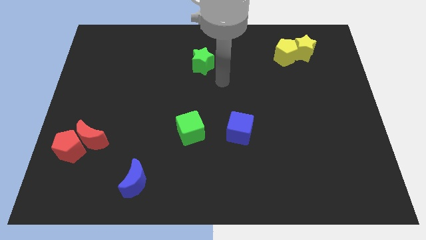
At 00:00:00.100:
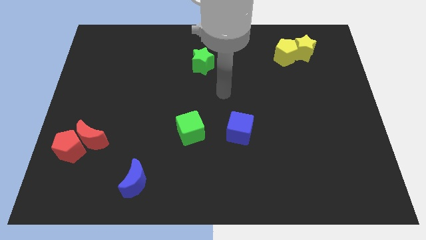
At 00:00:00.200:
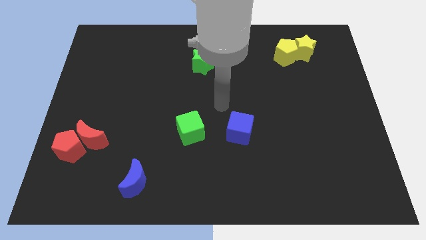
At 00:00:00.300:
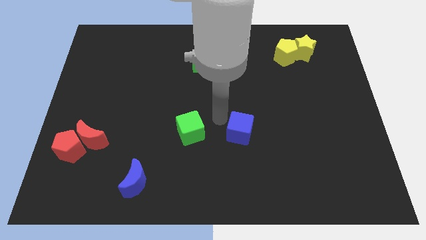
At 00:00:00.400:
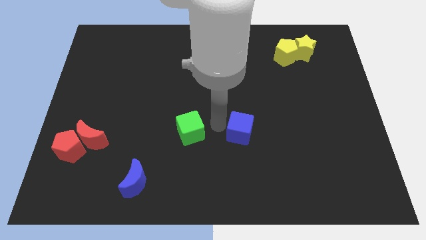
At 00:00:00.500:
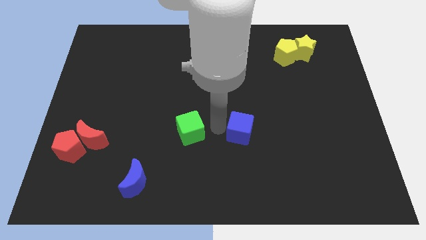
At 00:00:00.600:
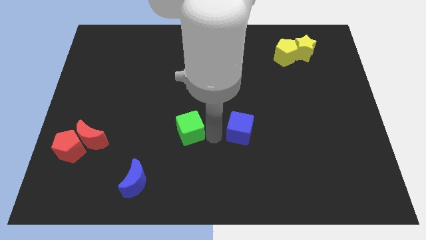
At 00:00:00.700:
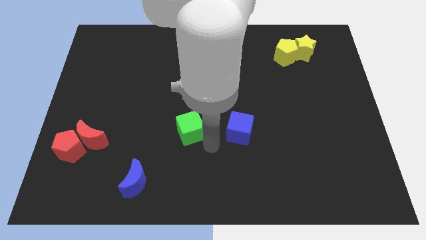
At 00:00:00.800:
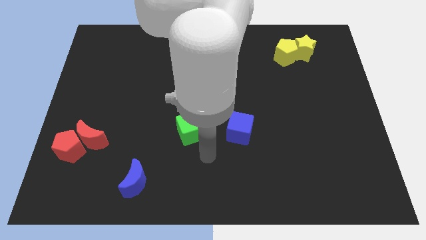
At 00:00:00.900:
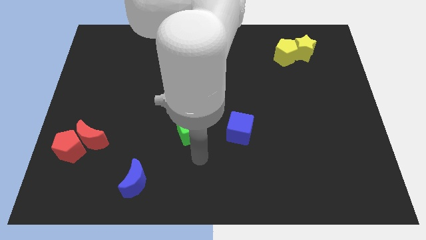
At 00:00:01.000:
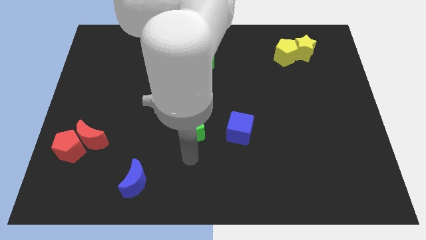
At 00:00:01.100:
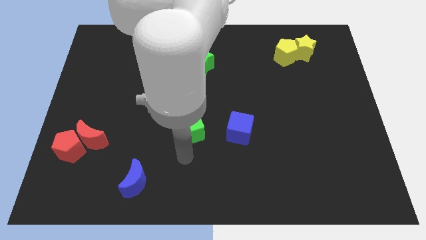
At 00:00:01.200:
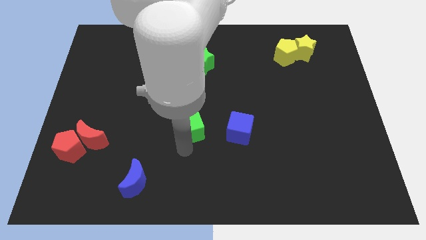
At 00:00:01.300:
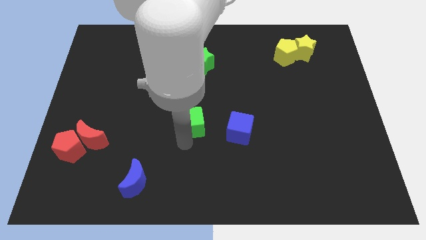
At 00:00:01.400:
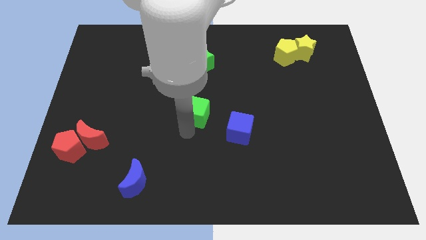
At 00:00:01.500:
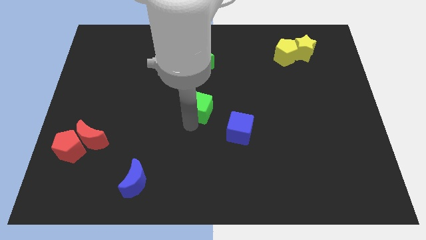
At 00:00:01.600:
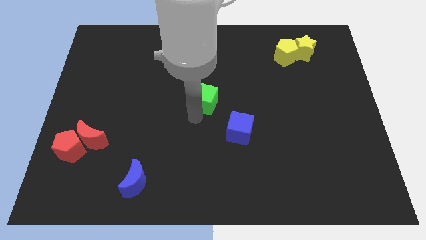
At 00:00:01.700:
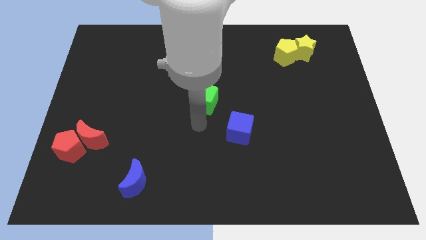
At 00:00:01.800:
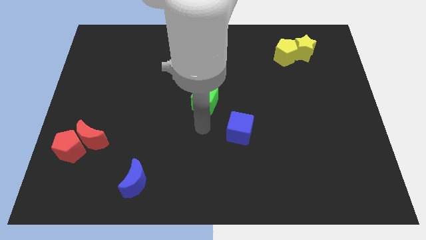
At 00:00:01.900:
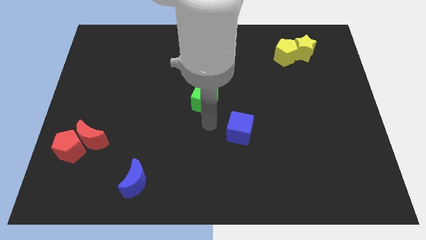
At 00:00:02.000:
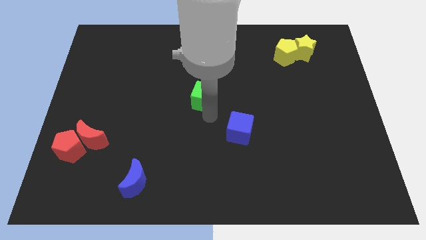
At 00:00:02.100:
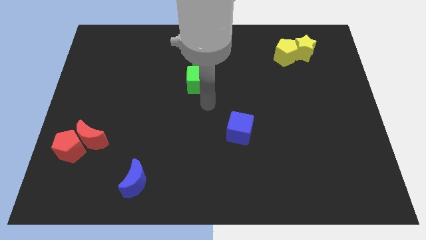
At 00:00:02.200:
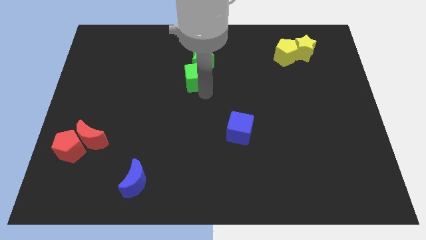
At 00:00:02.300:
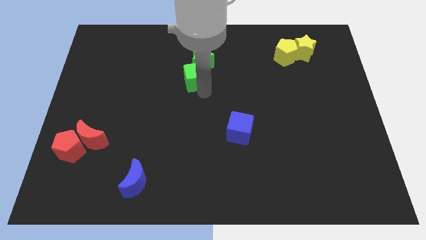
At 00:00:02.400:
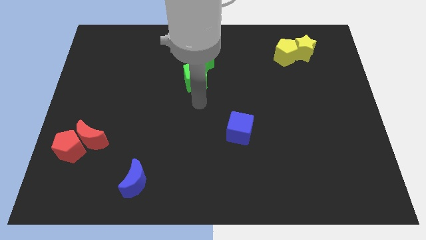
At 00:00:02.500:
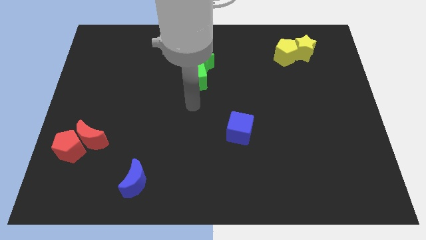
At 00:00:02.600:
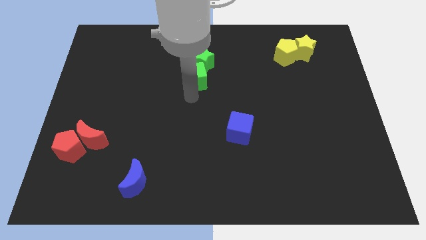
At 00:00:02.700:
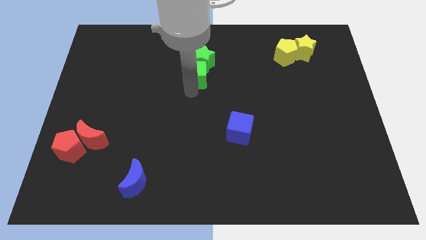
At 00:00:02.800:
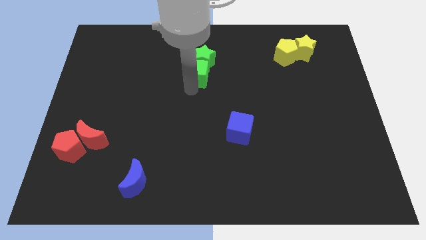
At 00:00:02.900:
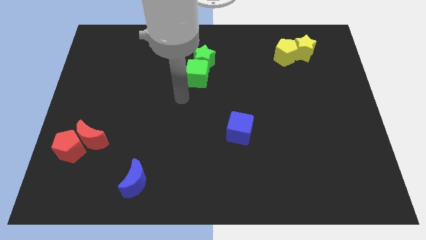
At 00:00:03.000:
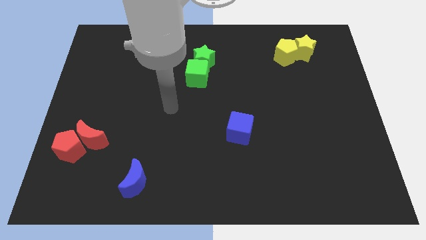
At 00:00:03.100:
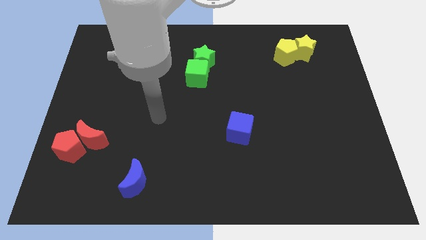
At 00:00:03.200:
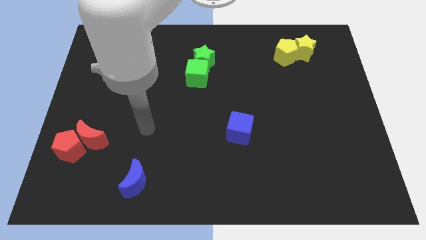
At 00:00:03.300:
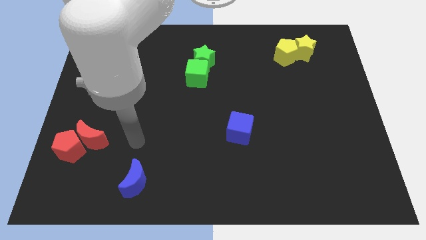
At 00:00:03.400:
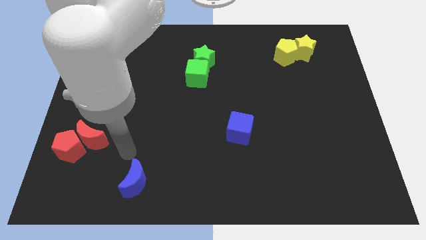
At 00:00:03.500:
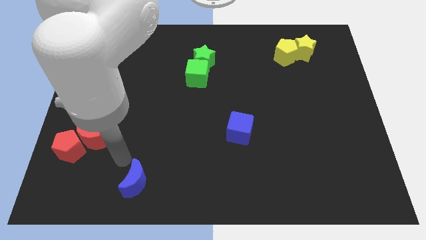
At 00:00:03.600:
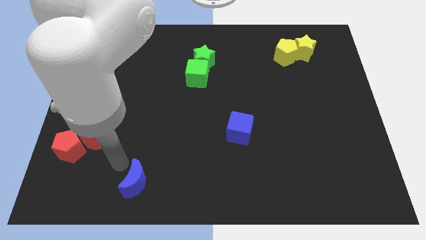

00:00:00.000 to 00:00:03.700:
slide the green cube into the green star

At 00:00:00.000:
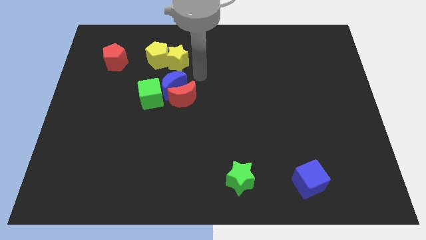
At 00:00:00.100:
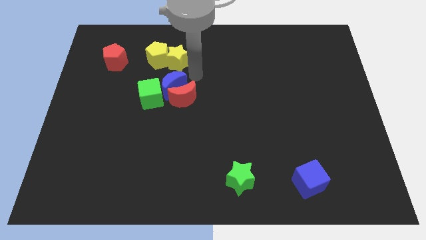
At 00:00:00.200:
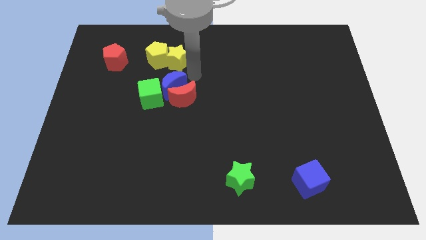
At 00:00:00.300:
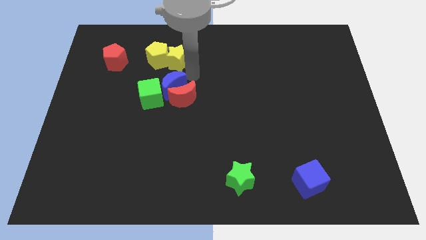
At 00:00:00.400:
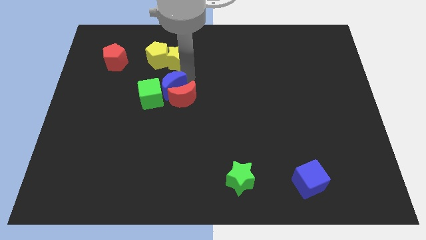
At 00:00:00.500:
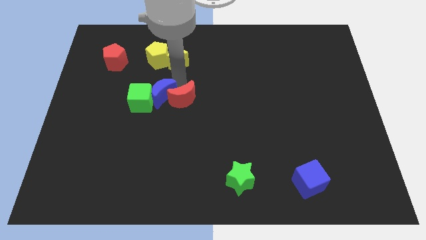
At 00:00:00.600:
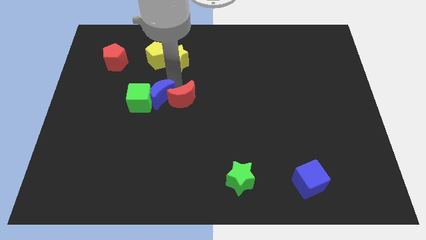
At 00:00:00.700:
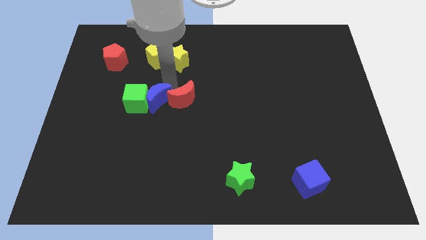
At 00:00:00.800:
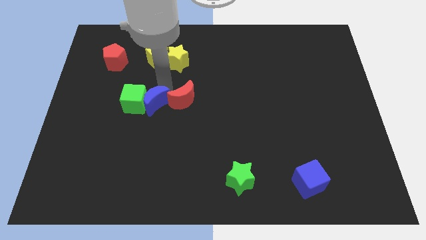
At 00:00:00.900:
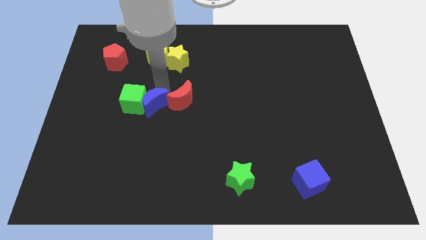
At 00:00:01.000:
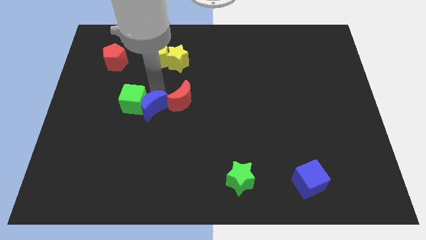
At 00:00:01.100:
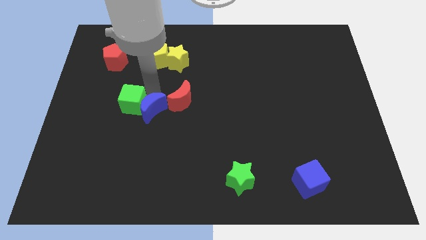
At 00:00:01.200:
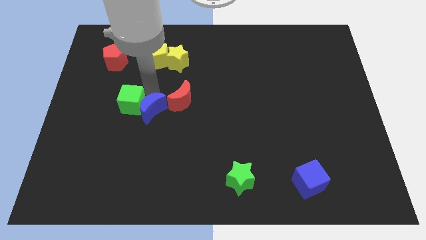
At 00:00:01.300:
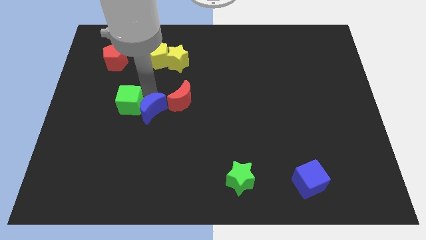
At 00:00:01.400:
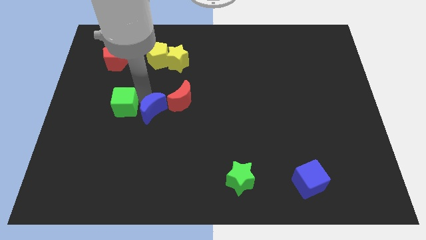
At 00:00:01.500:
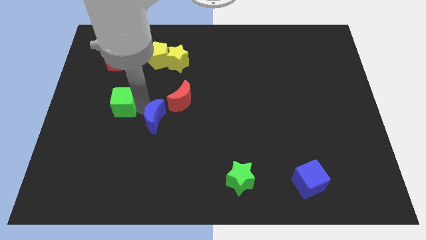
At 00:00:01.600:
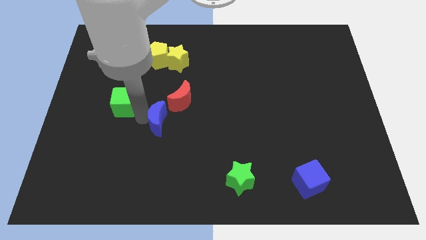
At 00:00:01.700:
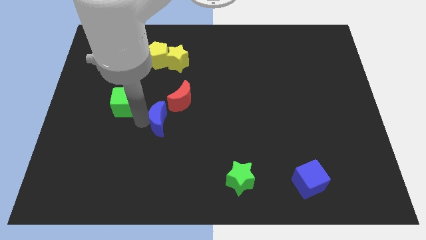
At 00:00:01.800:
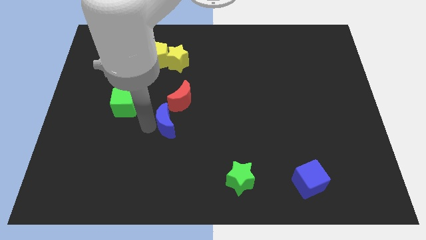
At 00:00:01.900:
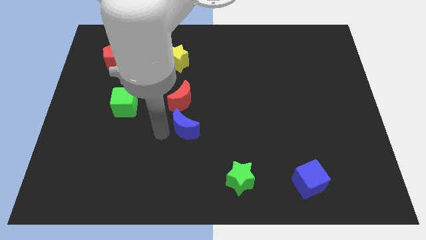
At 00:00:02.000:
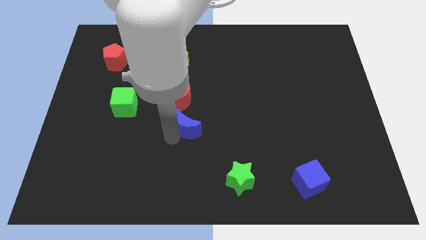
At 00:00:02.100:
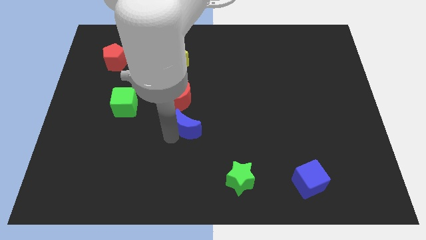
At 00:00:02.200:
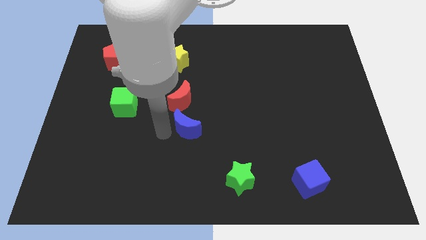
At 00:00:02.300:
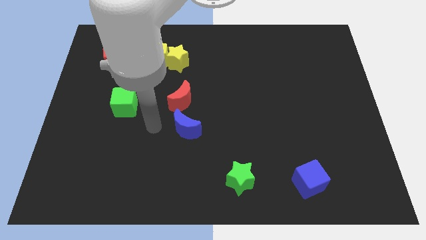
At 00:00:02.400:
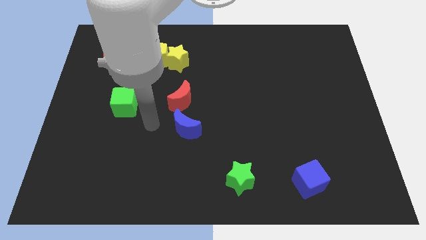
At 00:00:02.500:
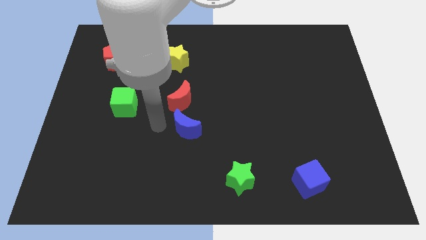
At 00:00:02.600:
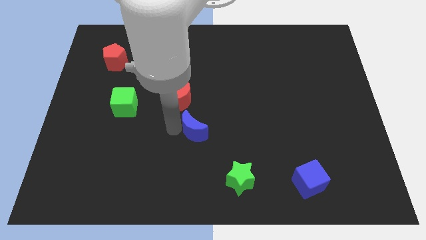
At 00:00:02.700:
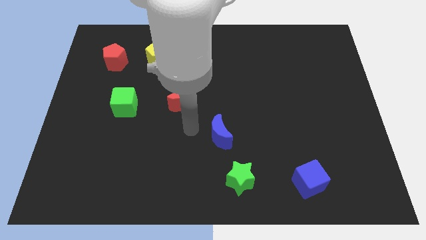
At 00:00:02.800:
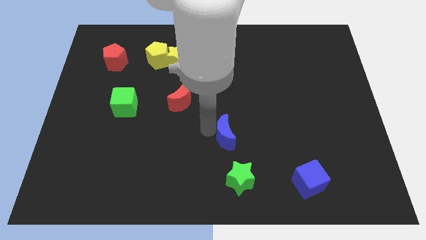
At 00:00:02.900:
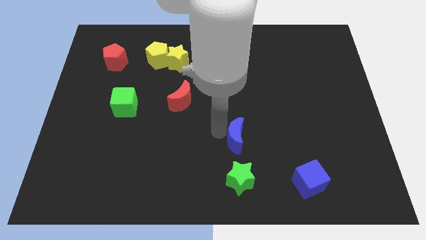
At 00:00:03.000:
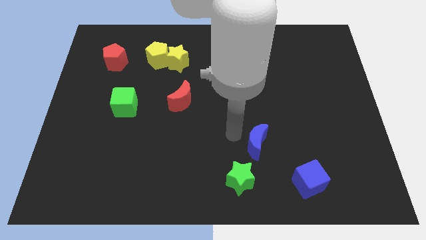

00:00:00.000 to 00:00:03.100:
separate the blue crescent from the red crescent and green cube

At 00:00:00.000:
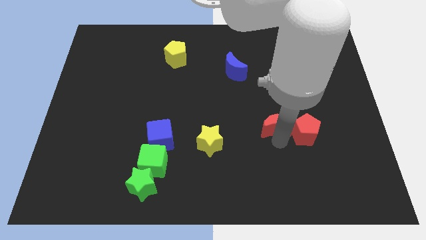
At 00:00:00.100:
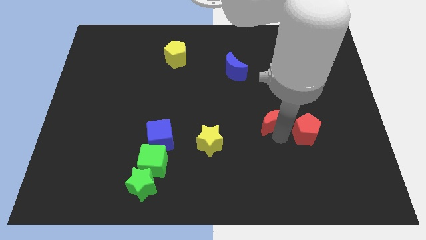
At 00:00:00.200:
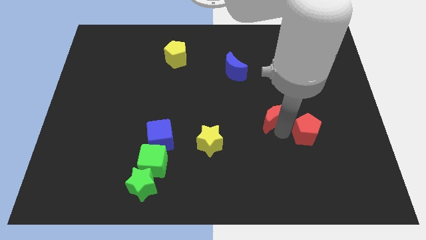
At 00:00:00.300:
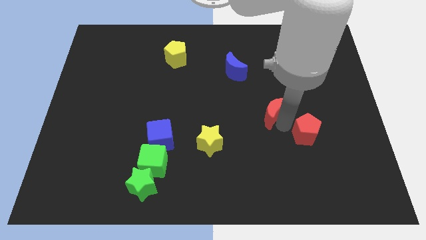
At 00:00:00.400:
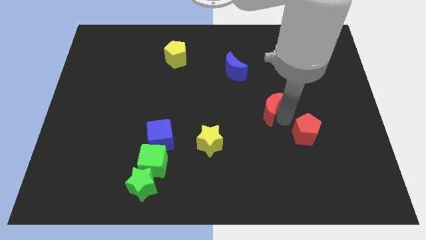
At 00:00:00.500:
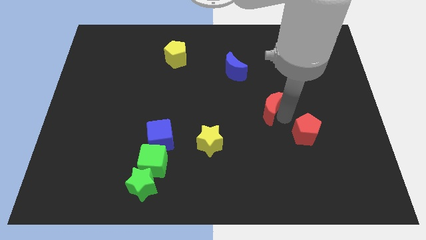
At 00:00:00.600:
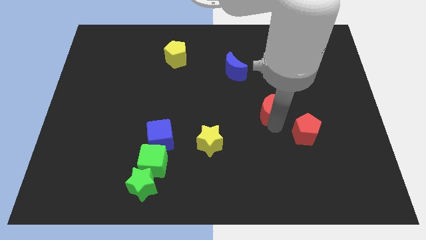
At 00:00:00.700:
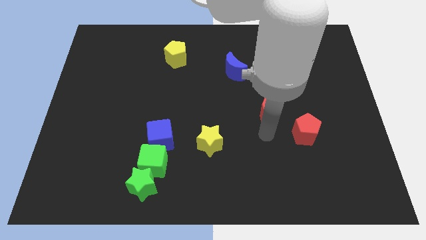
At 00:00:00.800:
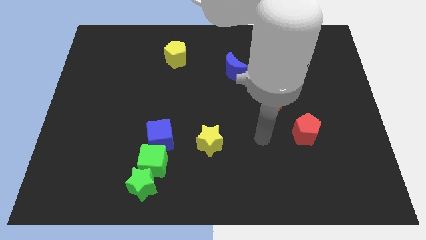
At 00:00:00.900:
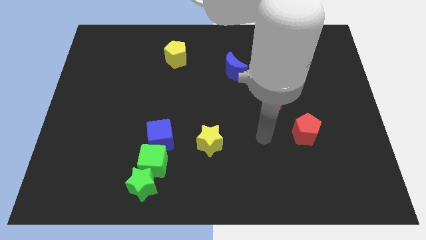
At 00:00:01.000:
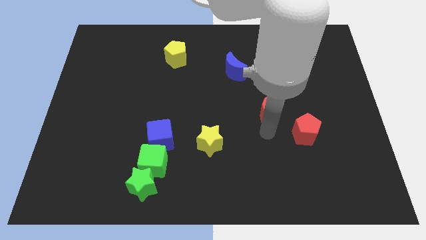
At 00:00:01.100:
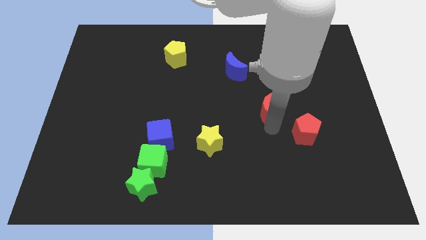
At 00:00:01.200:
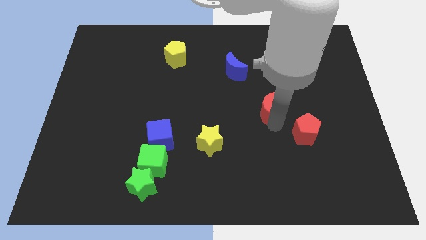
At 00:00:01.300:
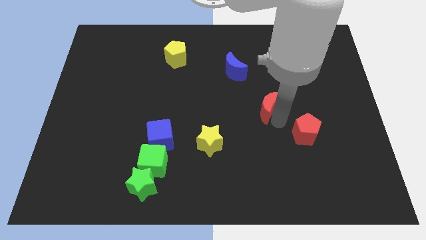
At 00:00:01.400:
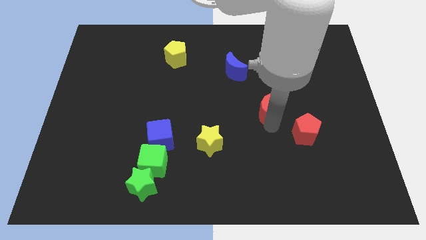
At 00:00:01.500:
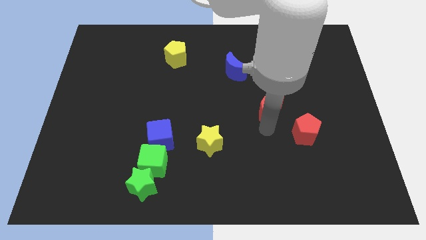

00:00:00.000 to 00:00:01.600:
push the red crescent to the top of the board

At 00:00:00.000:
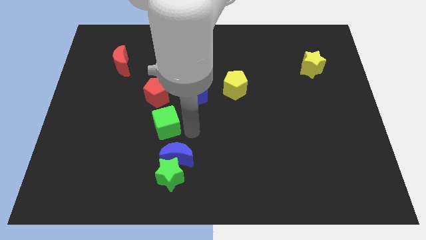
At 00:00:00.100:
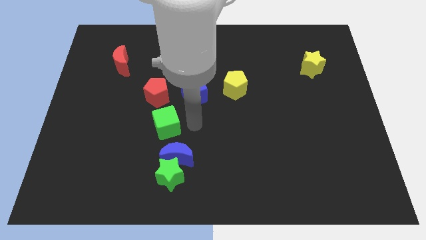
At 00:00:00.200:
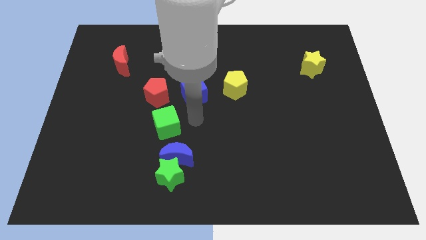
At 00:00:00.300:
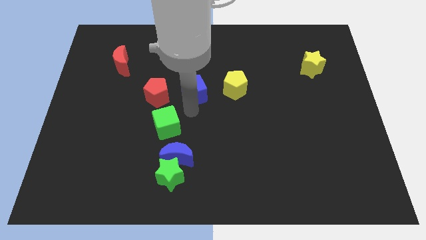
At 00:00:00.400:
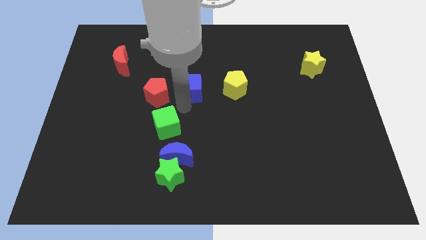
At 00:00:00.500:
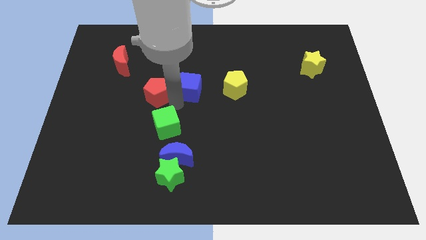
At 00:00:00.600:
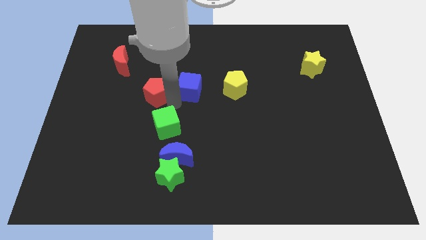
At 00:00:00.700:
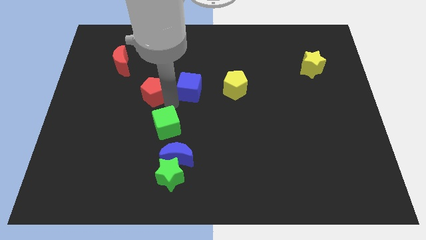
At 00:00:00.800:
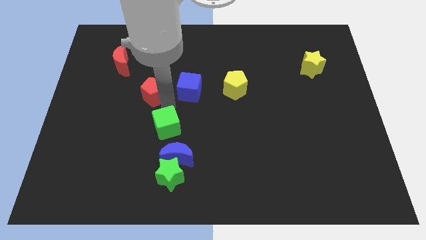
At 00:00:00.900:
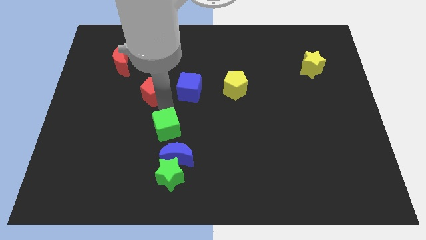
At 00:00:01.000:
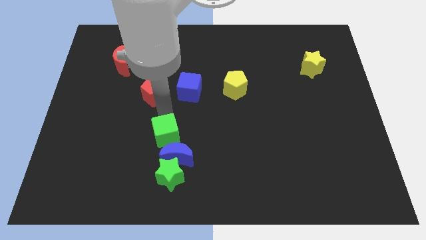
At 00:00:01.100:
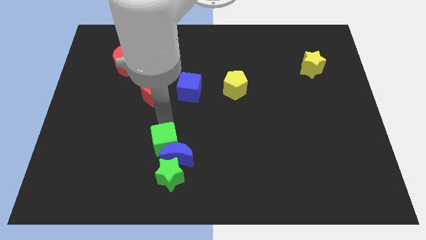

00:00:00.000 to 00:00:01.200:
move the green cube above the blue moon
